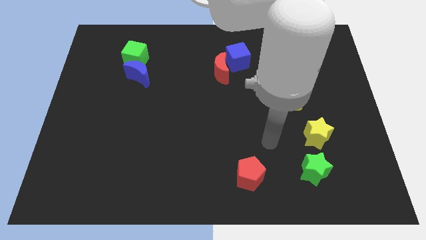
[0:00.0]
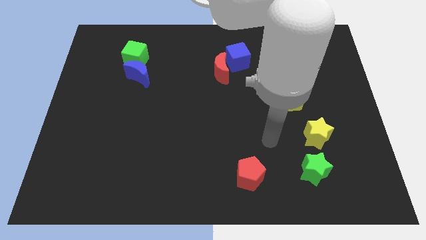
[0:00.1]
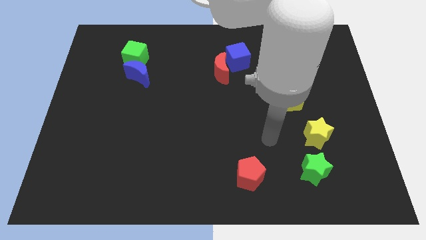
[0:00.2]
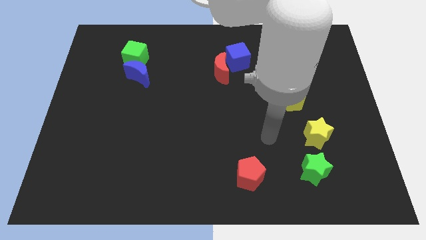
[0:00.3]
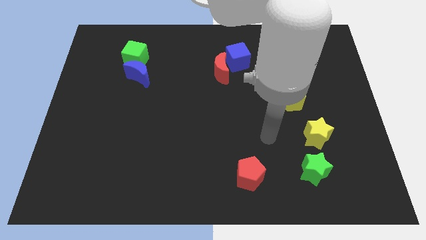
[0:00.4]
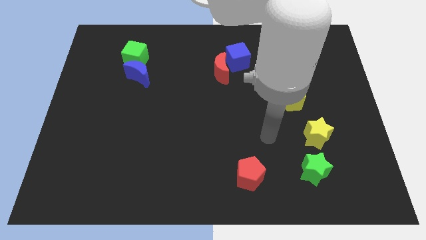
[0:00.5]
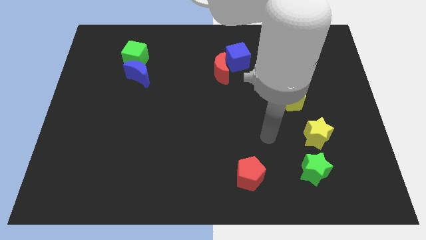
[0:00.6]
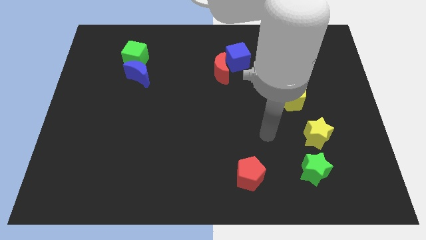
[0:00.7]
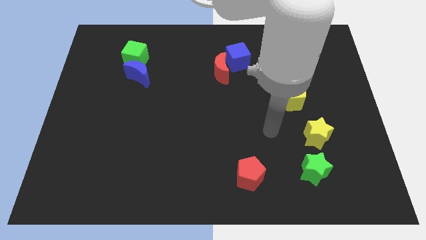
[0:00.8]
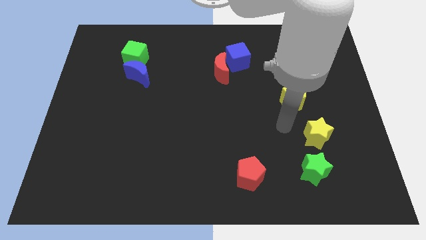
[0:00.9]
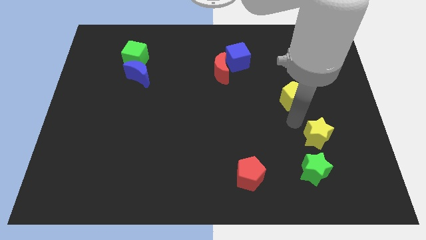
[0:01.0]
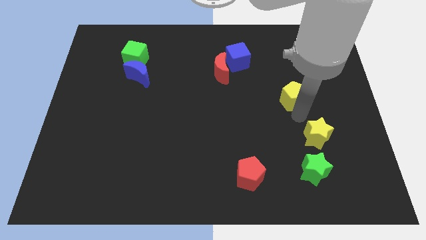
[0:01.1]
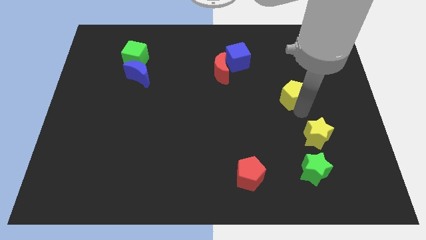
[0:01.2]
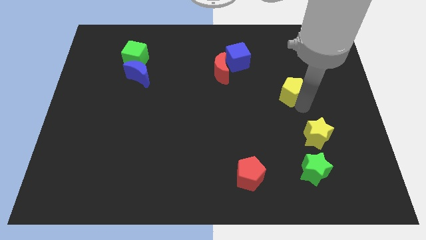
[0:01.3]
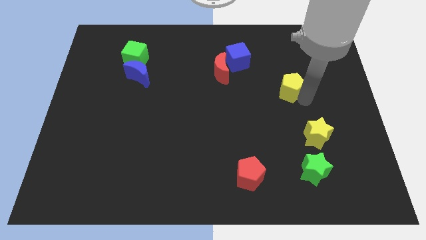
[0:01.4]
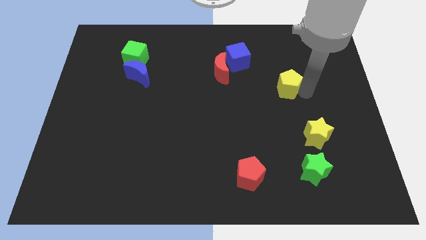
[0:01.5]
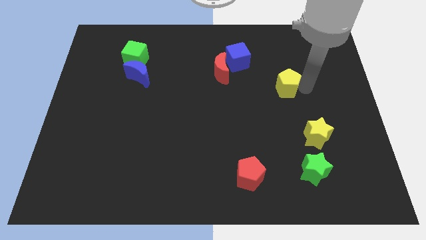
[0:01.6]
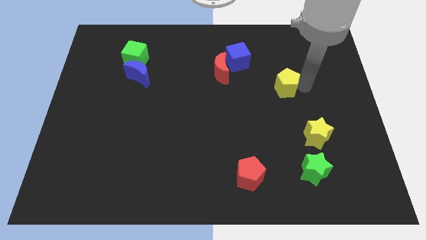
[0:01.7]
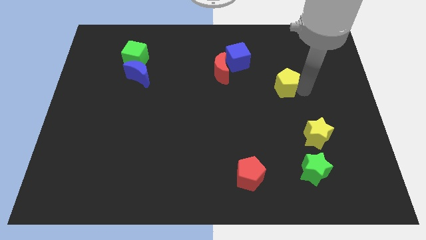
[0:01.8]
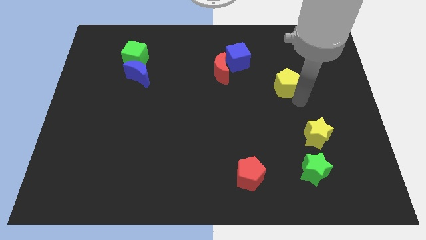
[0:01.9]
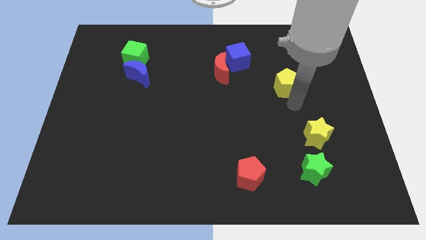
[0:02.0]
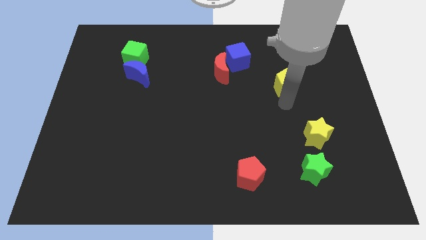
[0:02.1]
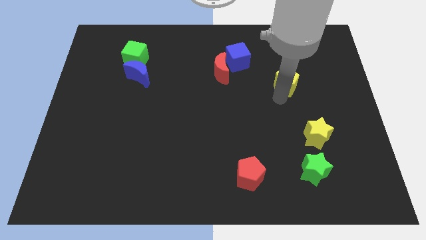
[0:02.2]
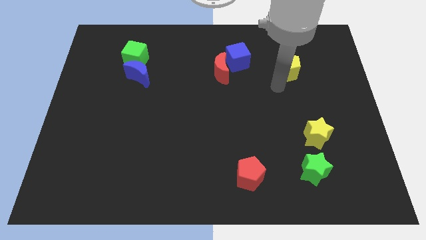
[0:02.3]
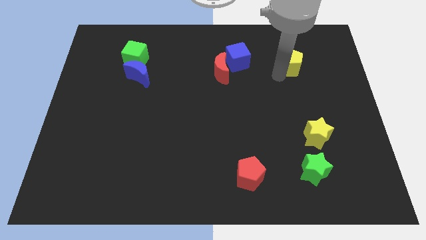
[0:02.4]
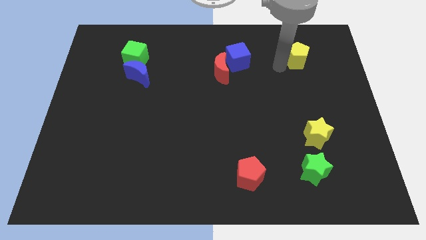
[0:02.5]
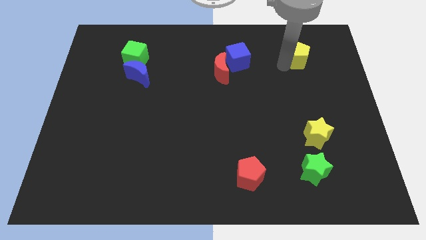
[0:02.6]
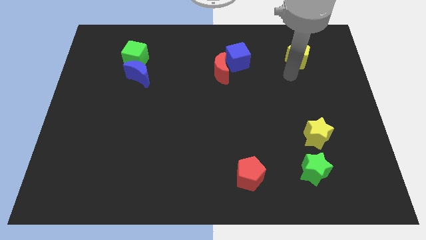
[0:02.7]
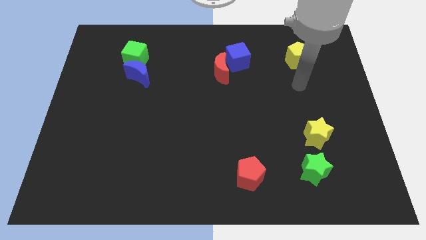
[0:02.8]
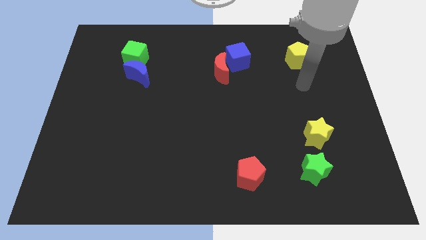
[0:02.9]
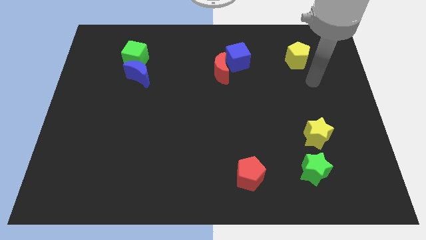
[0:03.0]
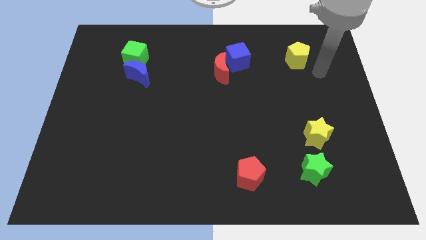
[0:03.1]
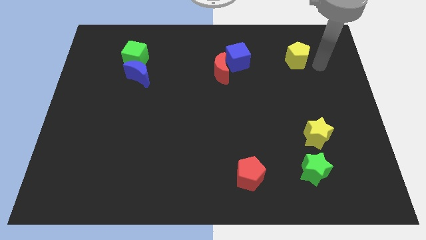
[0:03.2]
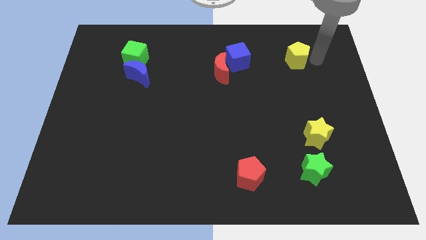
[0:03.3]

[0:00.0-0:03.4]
bring the yellow pentagon at the right side of the blue cube

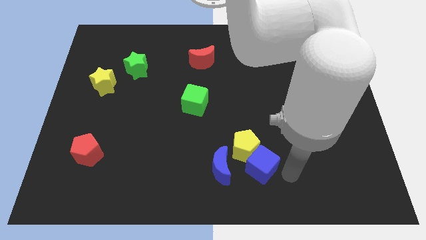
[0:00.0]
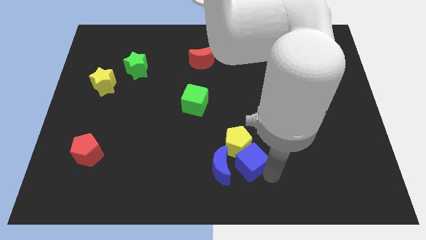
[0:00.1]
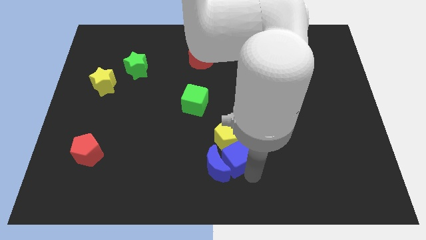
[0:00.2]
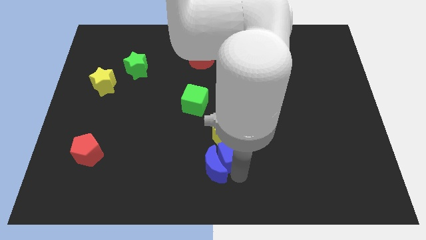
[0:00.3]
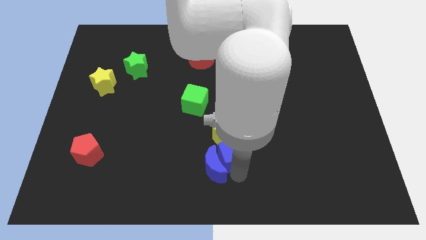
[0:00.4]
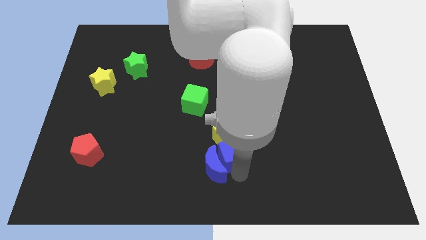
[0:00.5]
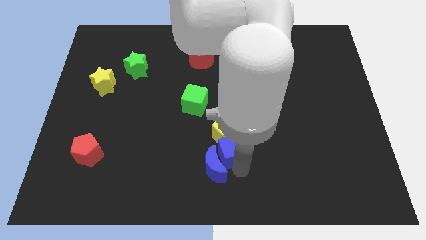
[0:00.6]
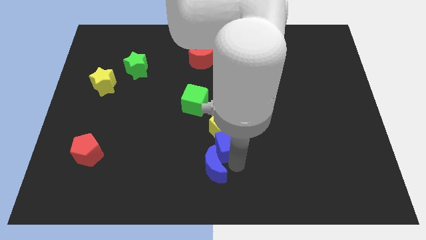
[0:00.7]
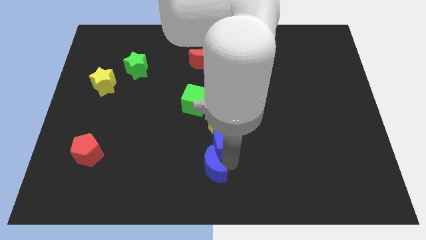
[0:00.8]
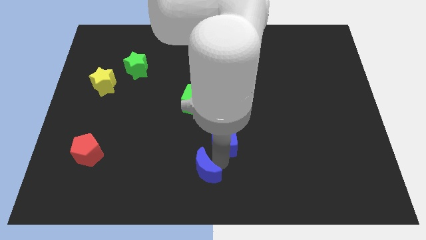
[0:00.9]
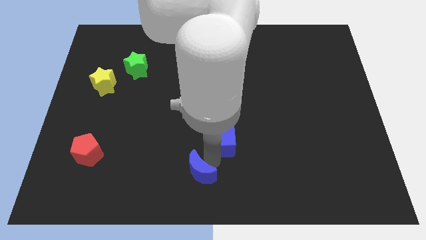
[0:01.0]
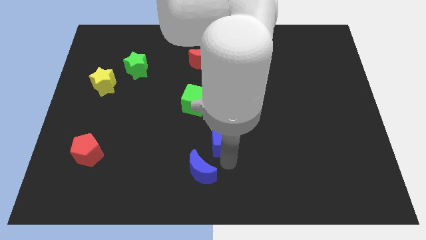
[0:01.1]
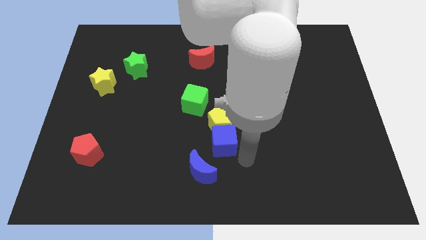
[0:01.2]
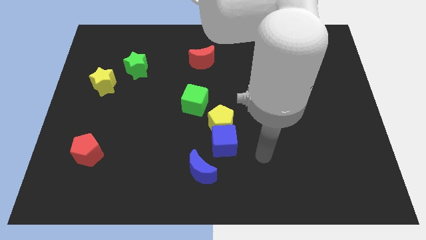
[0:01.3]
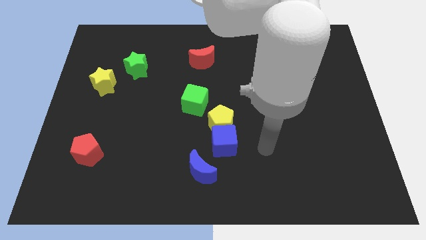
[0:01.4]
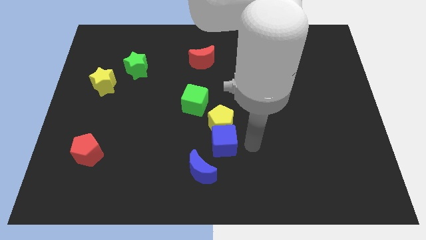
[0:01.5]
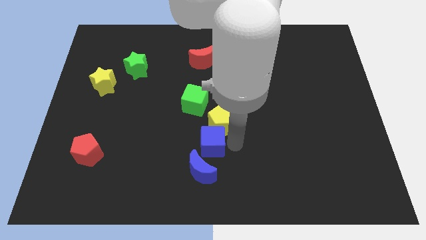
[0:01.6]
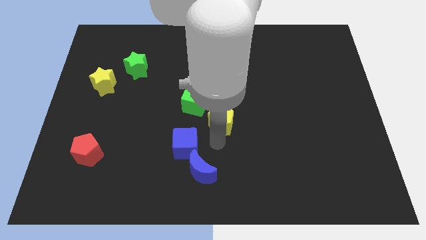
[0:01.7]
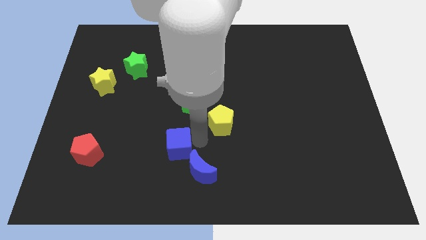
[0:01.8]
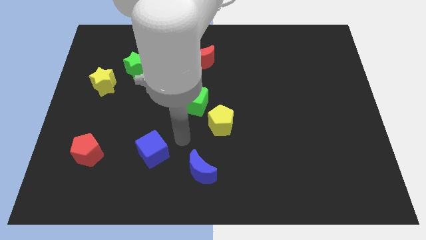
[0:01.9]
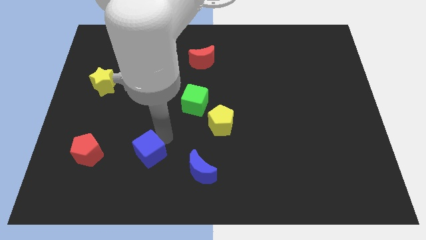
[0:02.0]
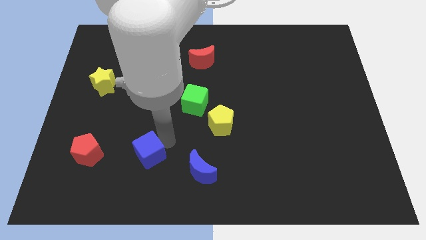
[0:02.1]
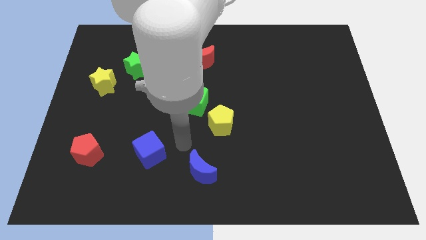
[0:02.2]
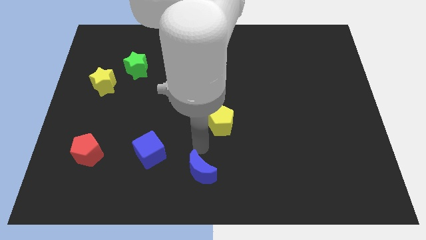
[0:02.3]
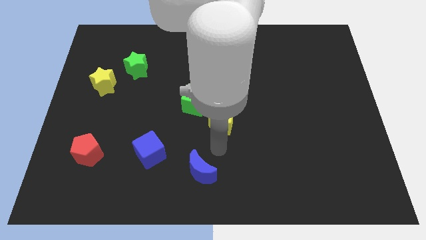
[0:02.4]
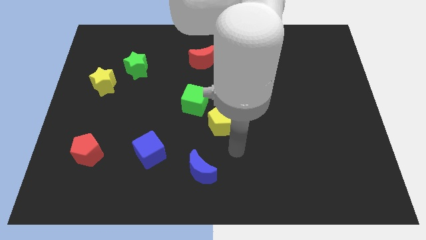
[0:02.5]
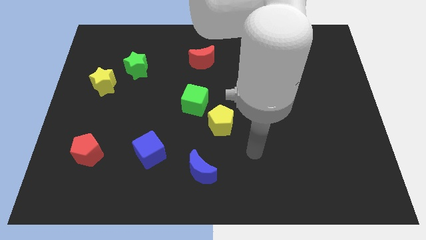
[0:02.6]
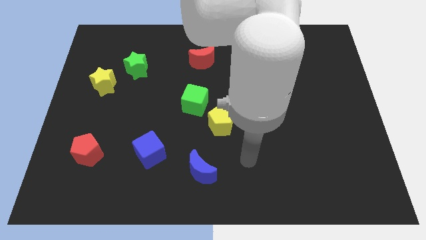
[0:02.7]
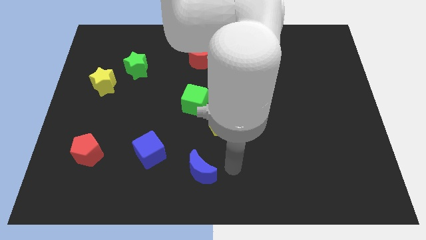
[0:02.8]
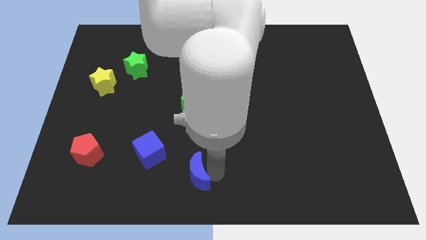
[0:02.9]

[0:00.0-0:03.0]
place the blue cube right to the red pentagon

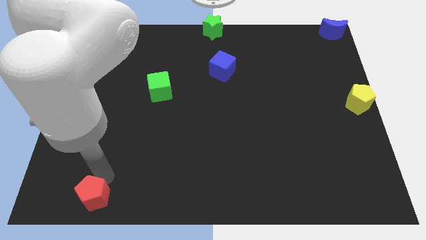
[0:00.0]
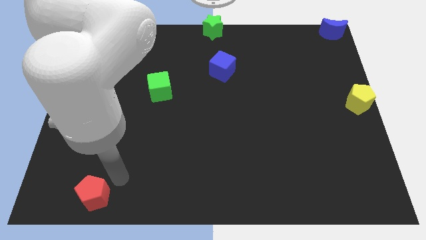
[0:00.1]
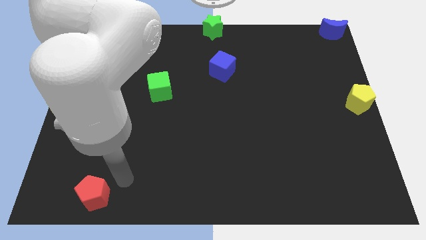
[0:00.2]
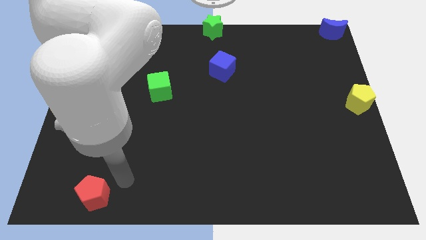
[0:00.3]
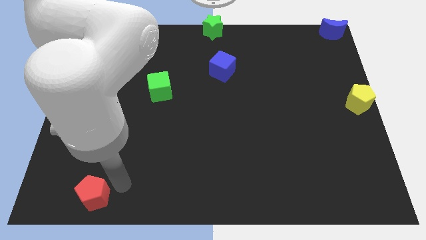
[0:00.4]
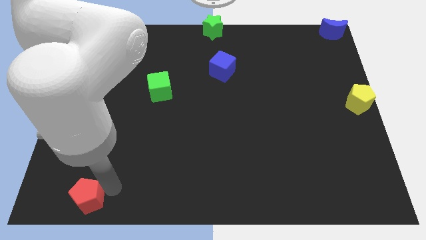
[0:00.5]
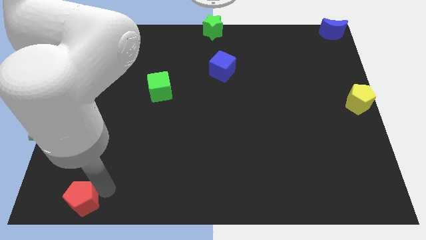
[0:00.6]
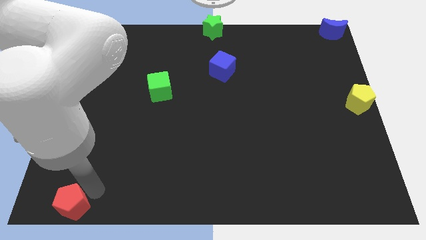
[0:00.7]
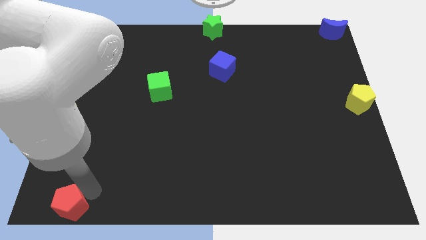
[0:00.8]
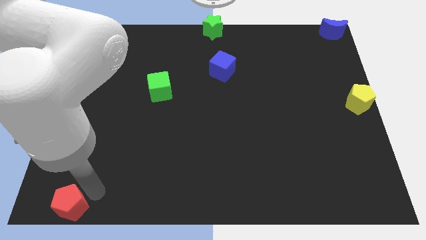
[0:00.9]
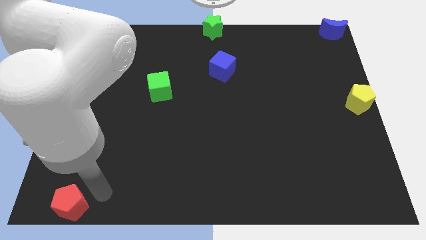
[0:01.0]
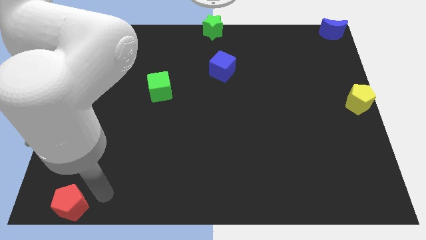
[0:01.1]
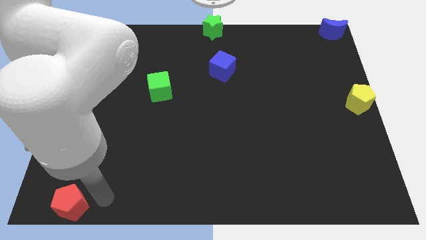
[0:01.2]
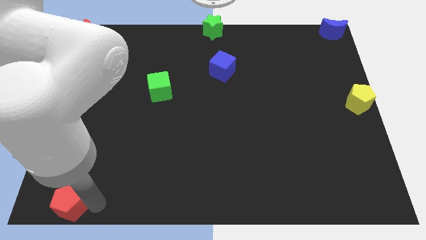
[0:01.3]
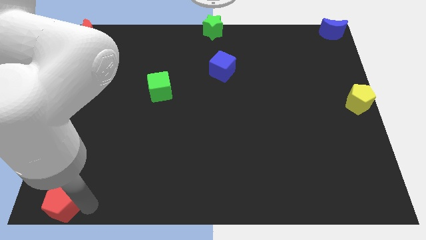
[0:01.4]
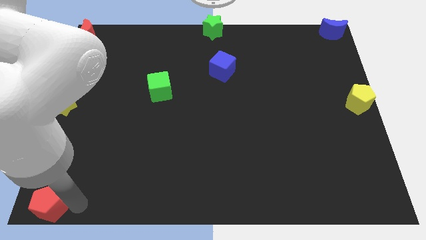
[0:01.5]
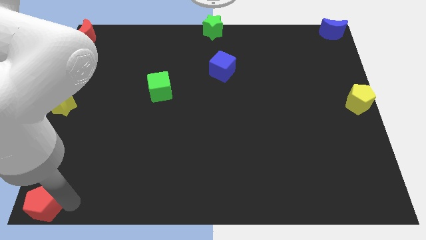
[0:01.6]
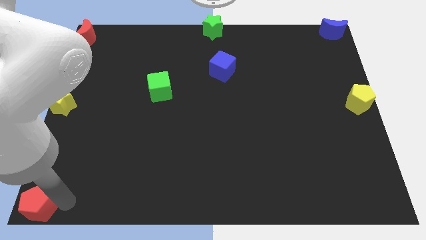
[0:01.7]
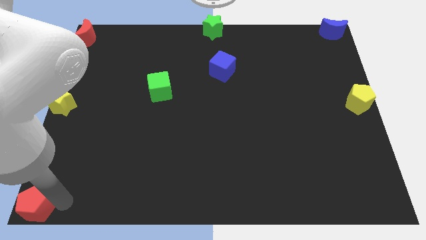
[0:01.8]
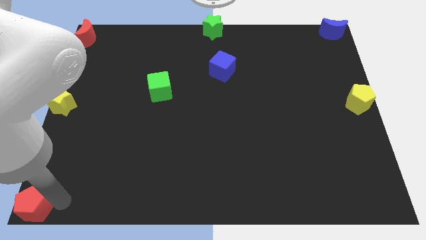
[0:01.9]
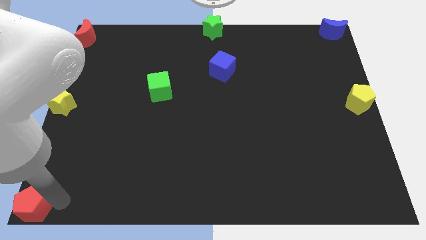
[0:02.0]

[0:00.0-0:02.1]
move the red pentagon to the left bottom of the board

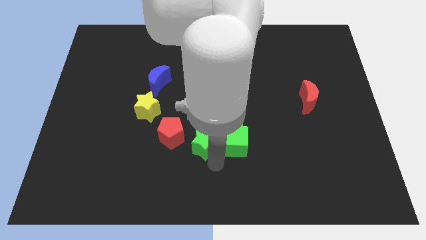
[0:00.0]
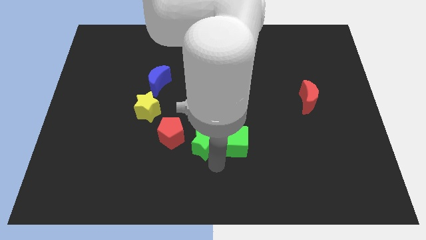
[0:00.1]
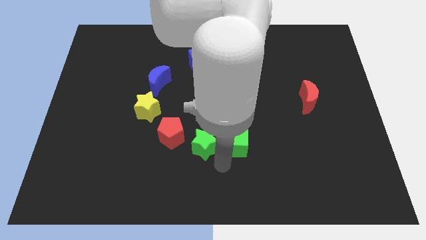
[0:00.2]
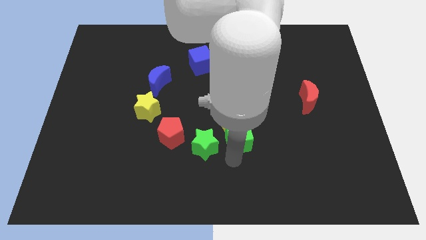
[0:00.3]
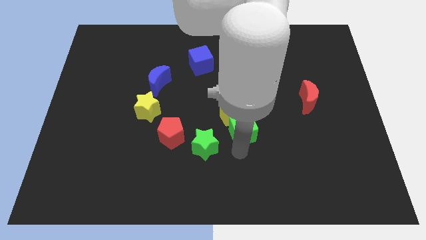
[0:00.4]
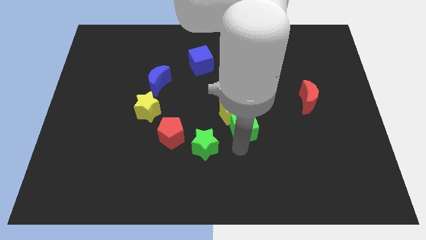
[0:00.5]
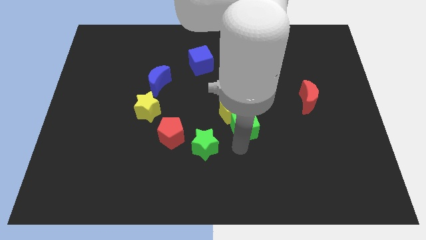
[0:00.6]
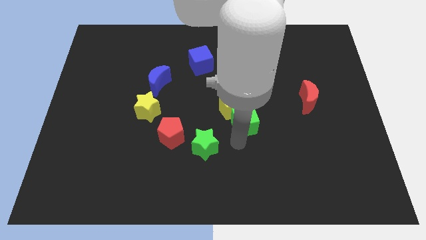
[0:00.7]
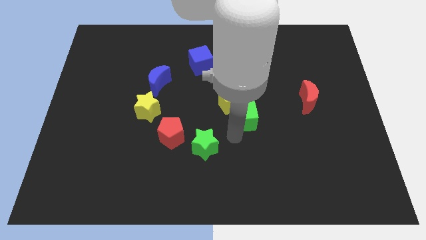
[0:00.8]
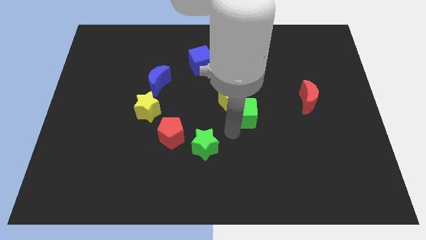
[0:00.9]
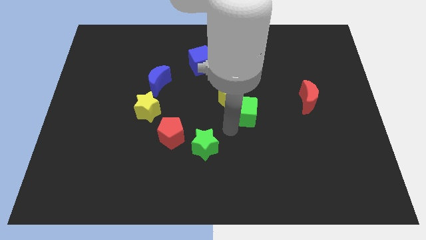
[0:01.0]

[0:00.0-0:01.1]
place green cube to the top right of green star
